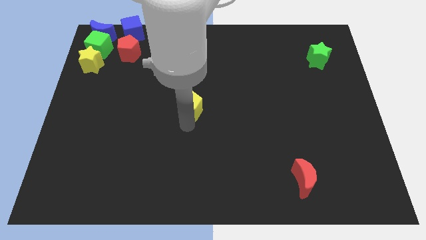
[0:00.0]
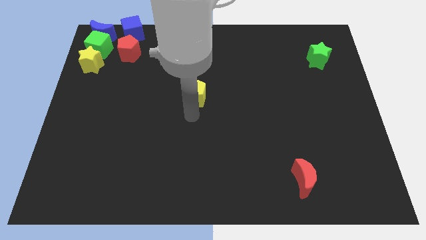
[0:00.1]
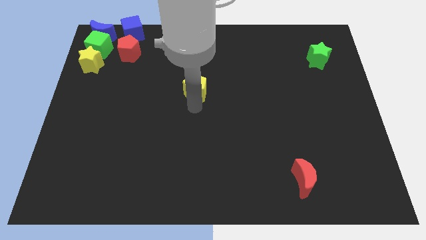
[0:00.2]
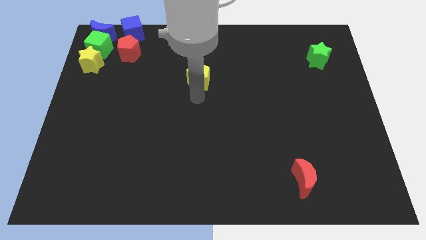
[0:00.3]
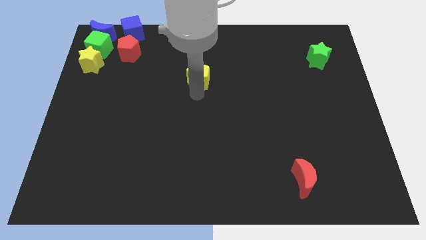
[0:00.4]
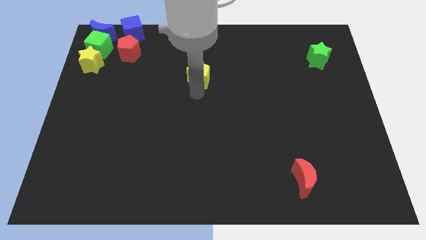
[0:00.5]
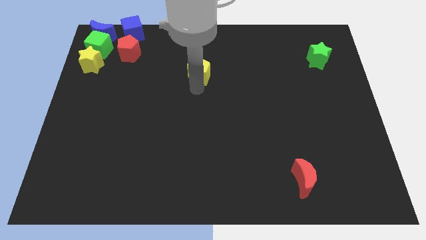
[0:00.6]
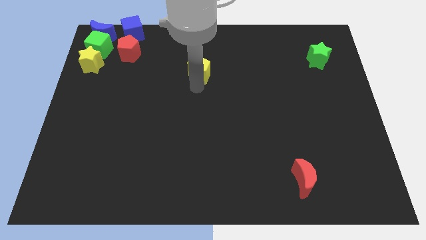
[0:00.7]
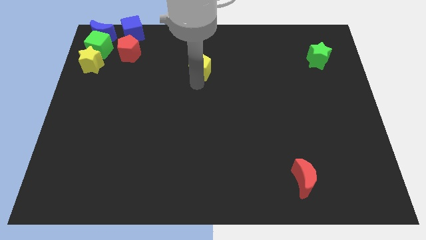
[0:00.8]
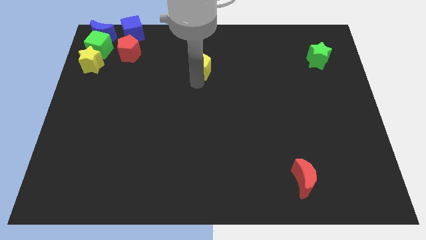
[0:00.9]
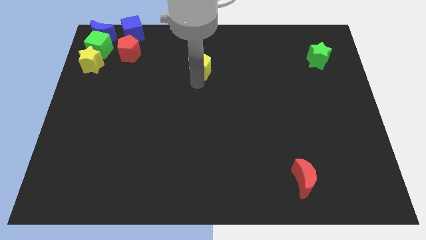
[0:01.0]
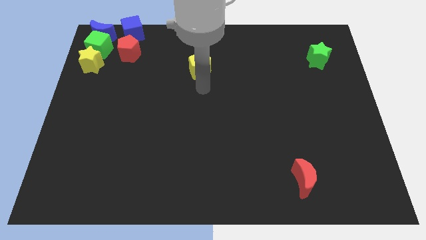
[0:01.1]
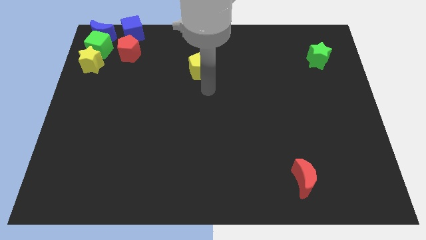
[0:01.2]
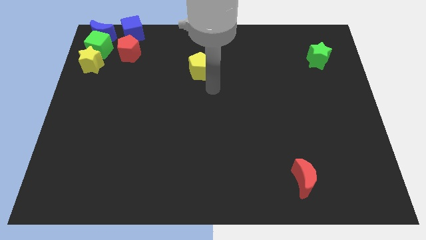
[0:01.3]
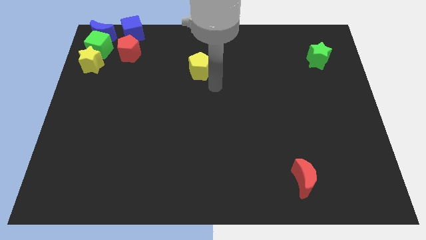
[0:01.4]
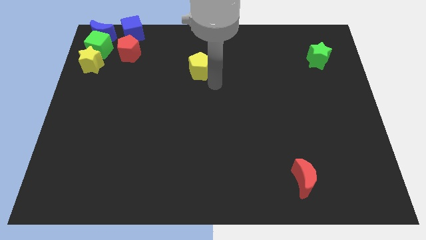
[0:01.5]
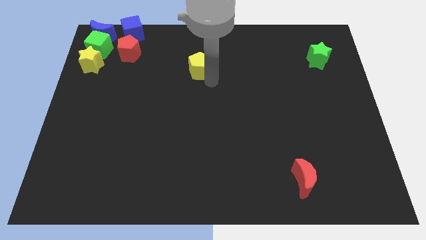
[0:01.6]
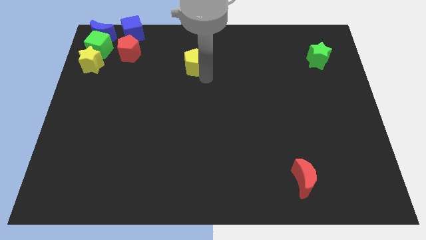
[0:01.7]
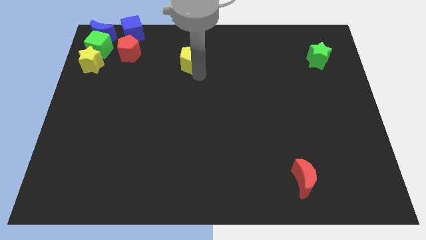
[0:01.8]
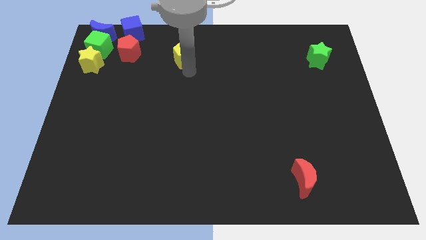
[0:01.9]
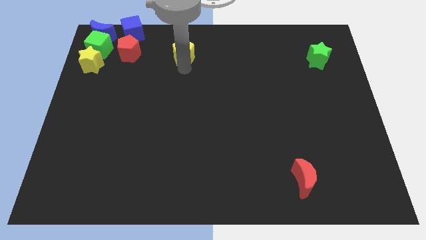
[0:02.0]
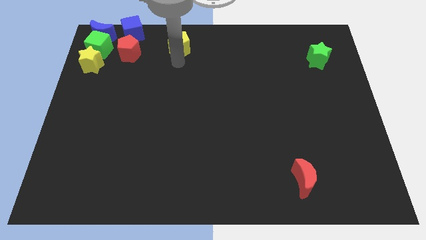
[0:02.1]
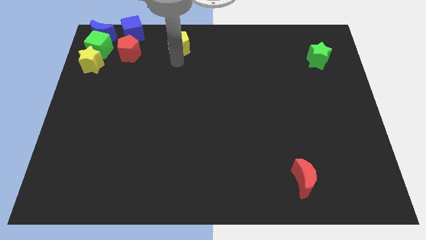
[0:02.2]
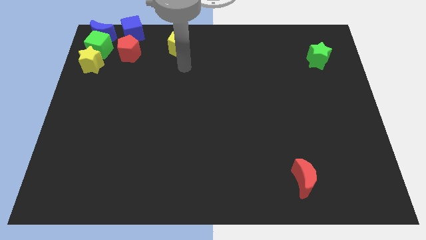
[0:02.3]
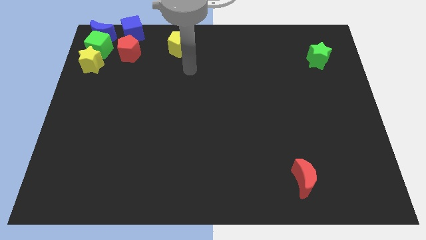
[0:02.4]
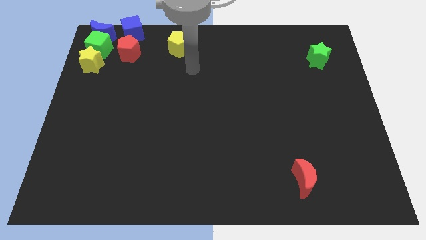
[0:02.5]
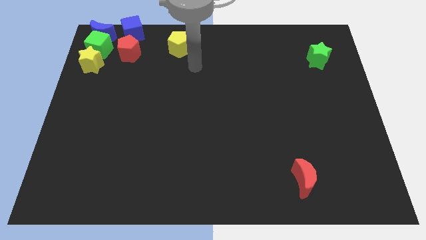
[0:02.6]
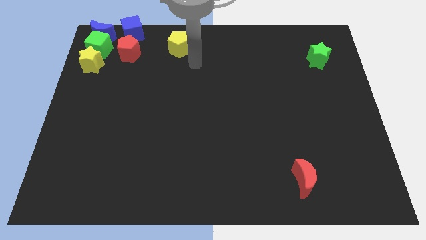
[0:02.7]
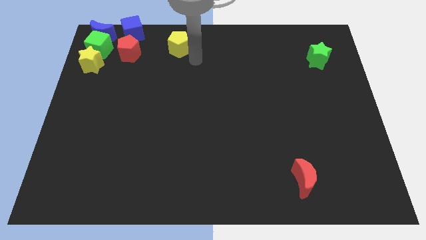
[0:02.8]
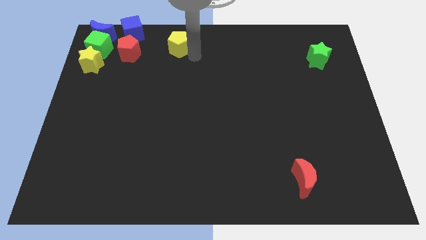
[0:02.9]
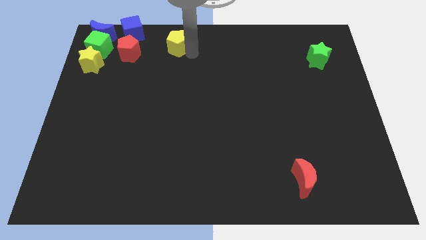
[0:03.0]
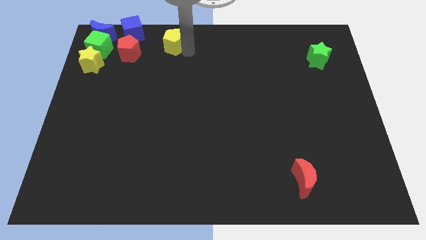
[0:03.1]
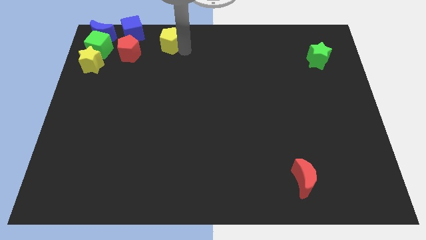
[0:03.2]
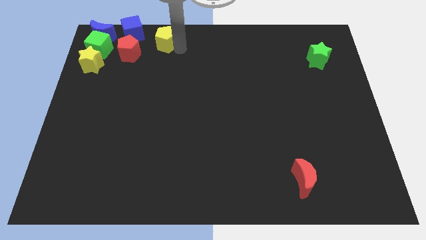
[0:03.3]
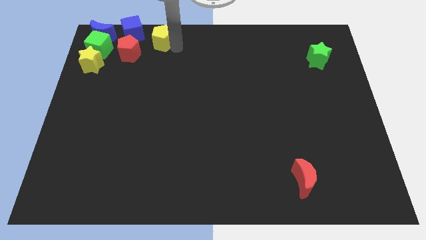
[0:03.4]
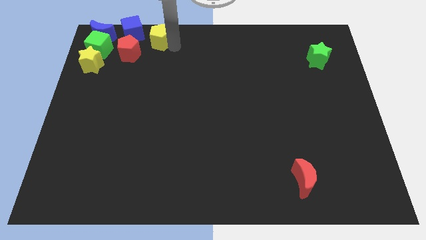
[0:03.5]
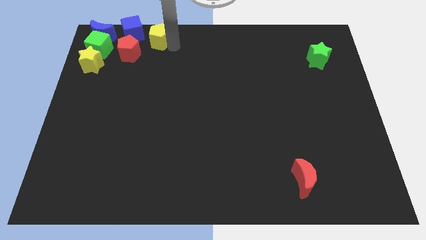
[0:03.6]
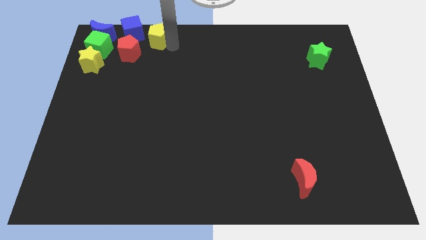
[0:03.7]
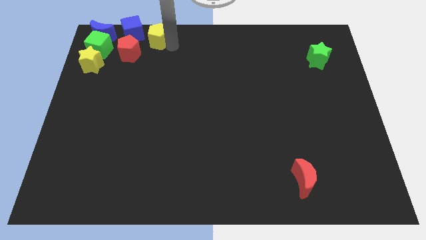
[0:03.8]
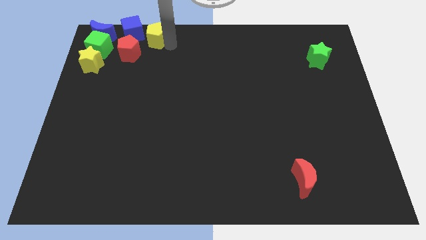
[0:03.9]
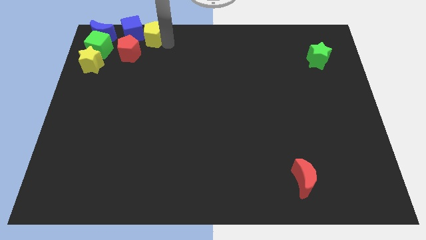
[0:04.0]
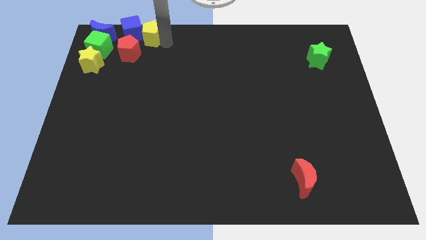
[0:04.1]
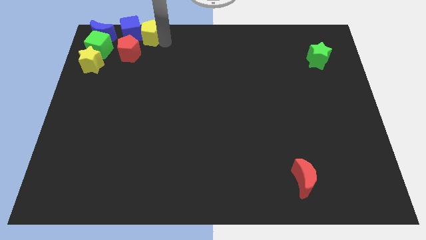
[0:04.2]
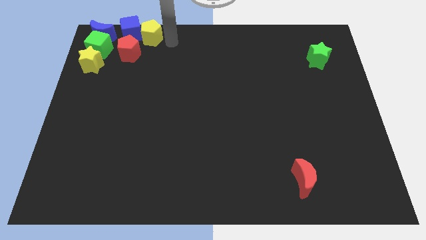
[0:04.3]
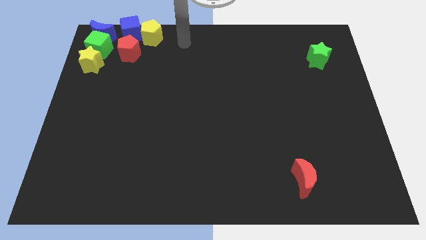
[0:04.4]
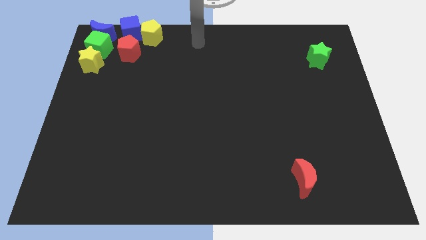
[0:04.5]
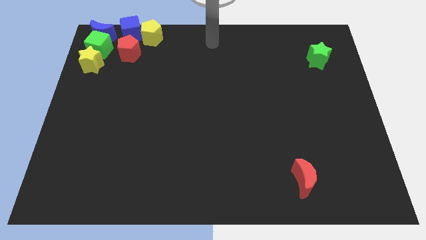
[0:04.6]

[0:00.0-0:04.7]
place yellow pentagon to the right blue cube

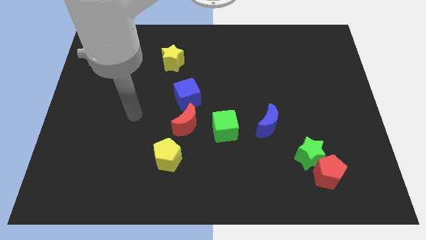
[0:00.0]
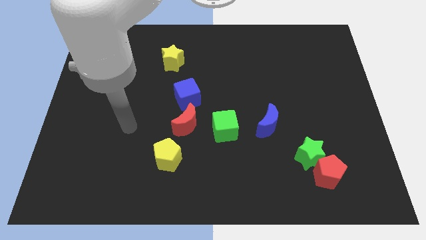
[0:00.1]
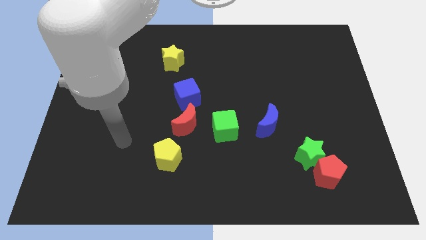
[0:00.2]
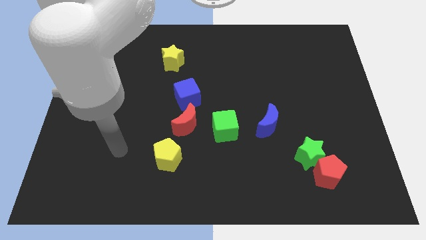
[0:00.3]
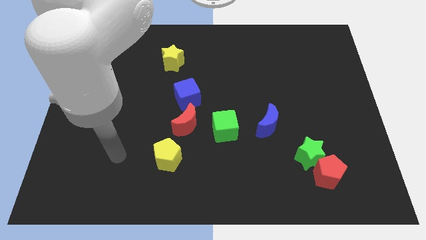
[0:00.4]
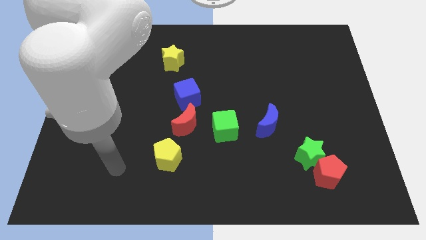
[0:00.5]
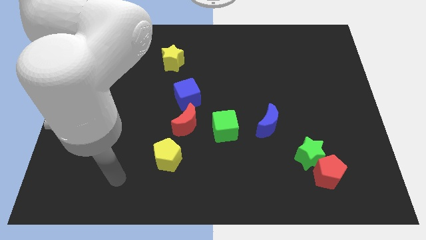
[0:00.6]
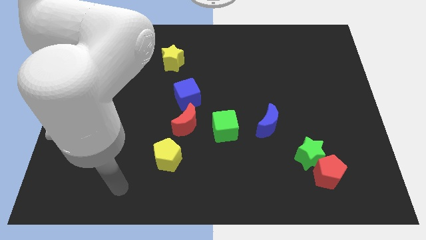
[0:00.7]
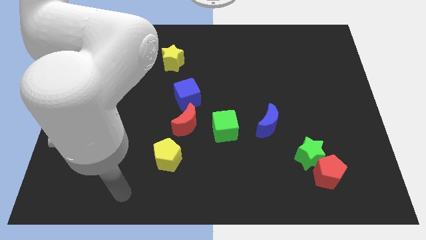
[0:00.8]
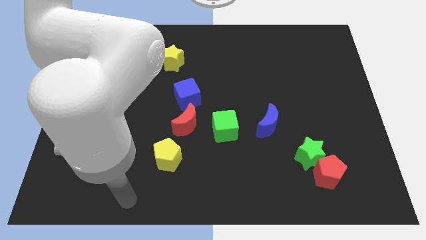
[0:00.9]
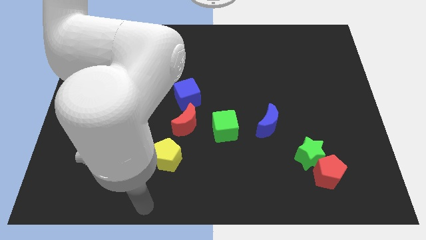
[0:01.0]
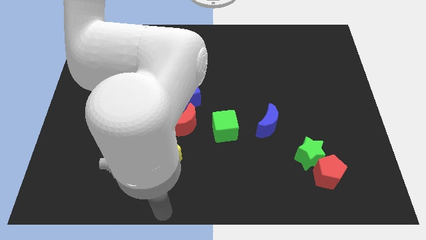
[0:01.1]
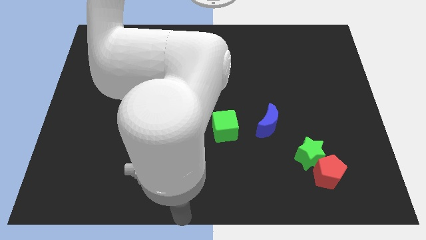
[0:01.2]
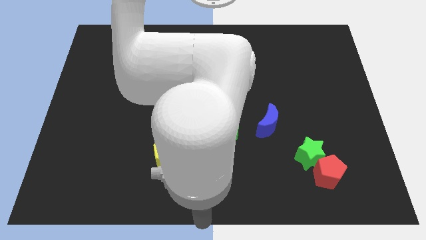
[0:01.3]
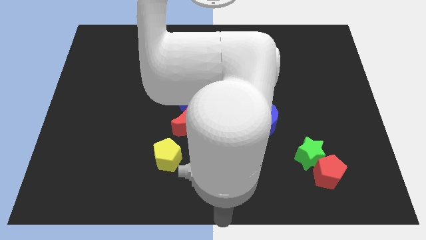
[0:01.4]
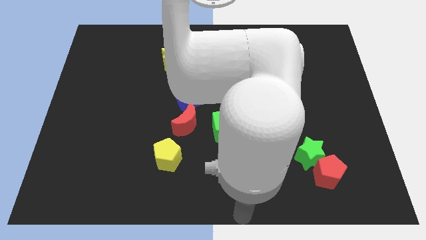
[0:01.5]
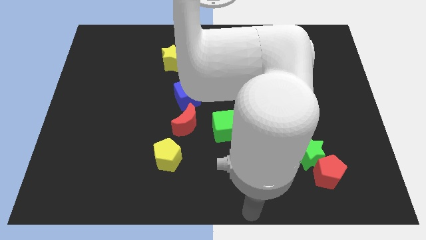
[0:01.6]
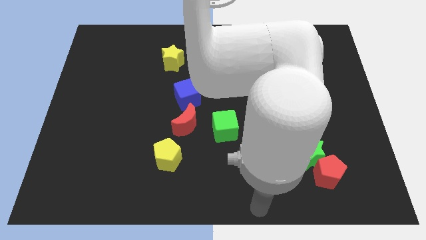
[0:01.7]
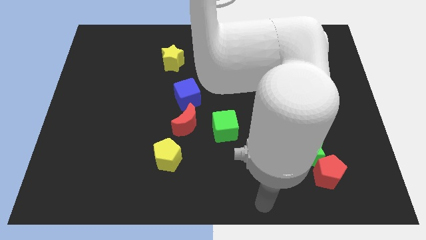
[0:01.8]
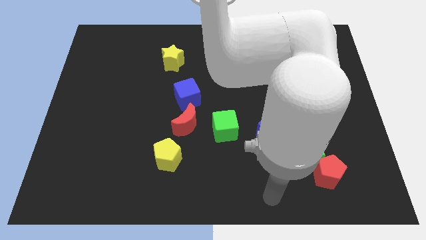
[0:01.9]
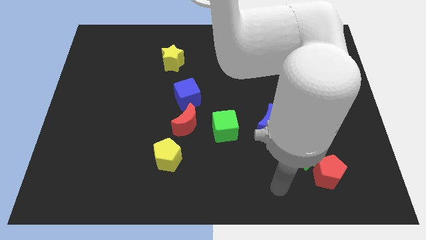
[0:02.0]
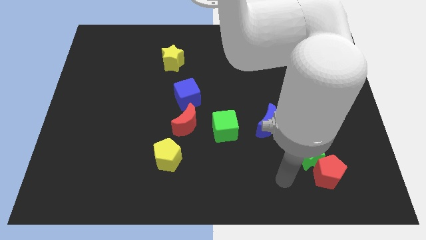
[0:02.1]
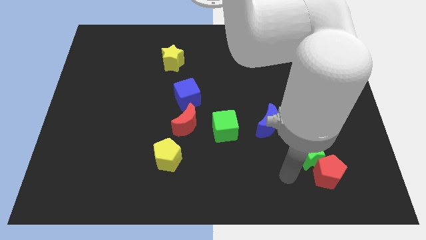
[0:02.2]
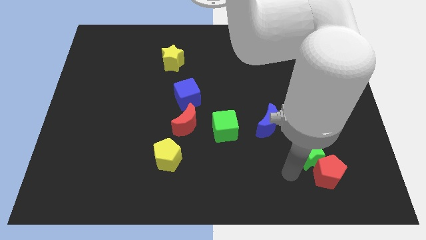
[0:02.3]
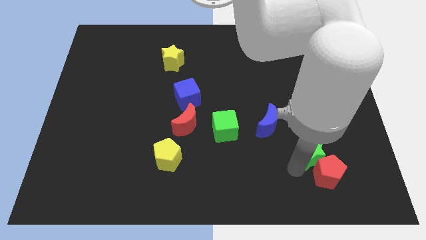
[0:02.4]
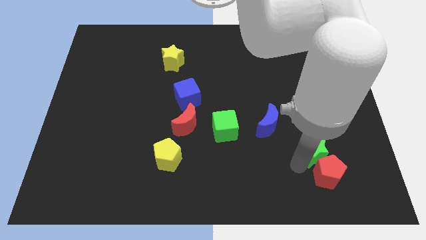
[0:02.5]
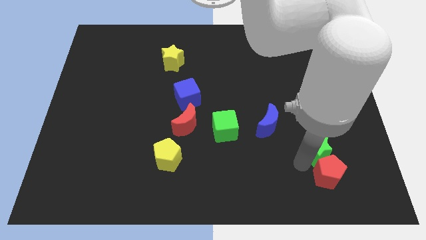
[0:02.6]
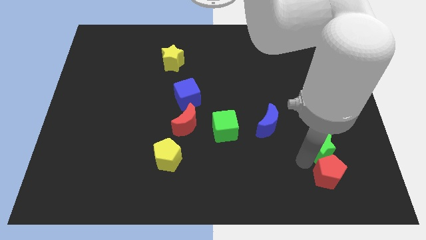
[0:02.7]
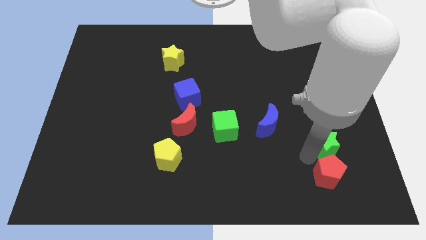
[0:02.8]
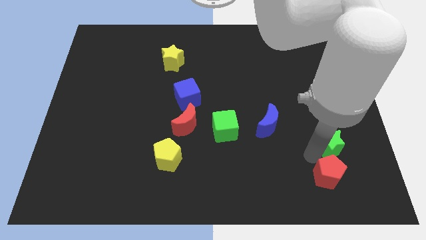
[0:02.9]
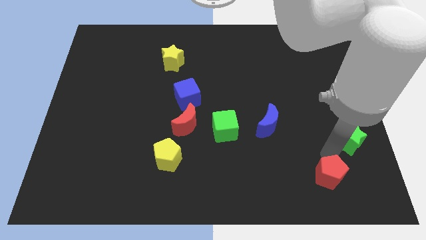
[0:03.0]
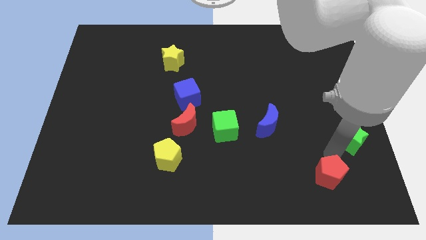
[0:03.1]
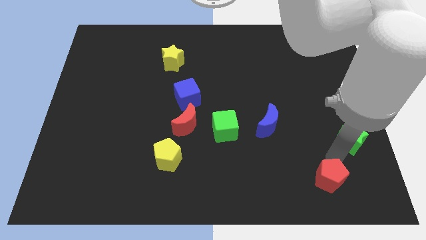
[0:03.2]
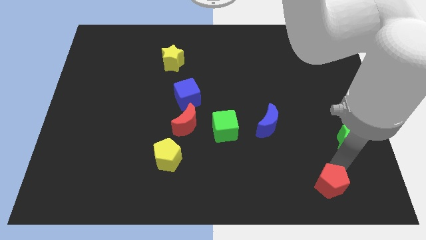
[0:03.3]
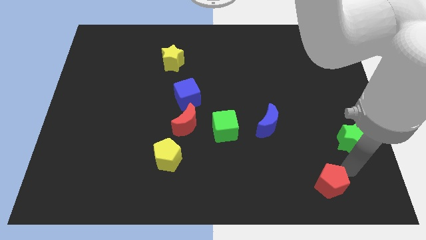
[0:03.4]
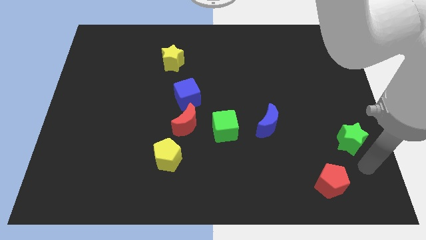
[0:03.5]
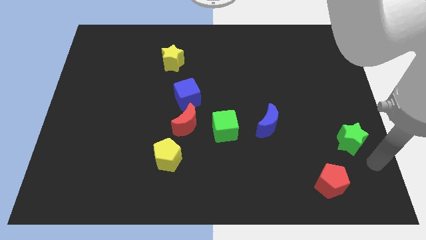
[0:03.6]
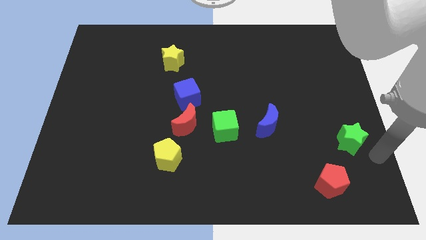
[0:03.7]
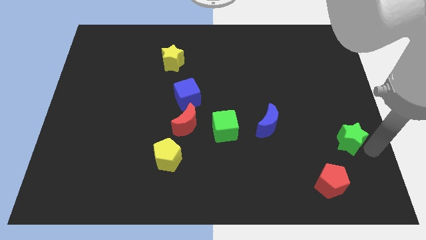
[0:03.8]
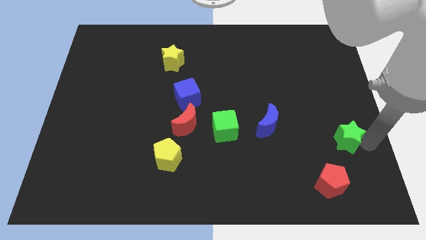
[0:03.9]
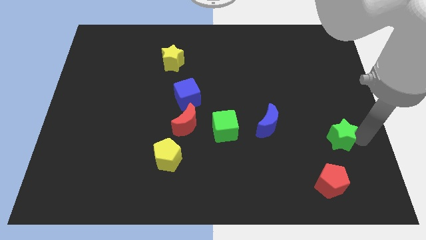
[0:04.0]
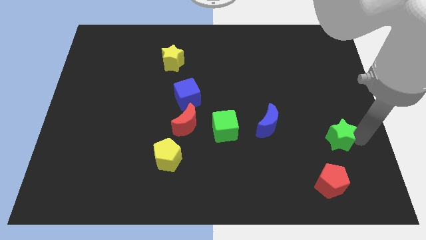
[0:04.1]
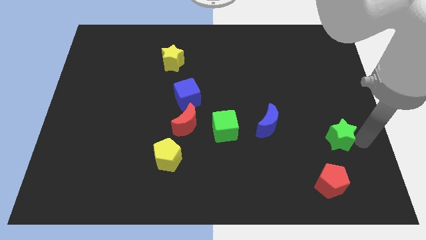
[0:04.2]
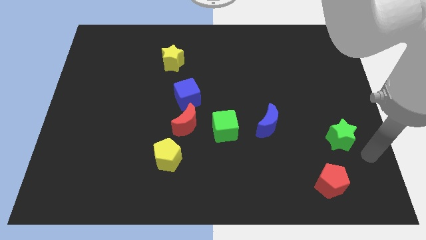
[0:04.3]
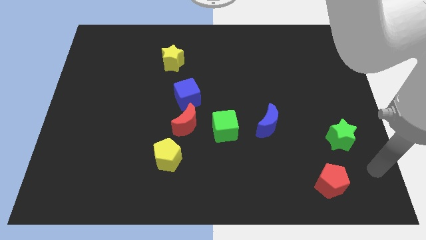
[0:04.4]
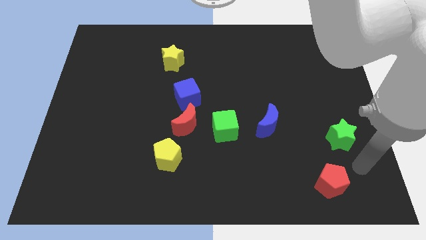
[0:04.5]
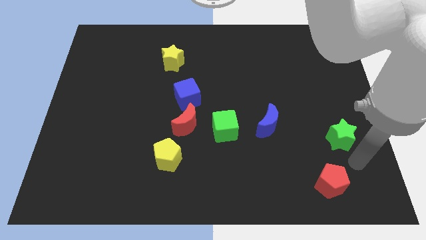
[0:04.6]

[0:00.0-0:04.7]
separate the red pentagon and green star
